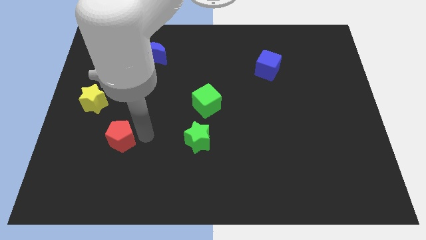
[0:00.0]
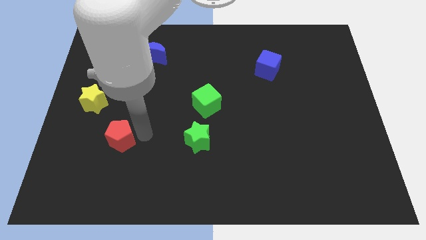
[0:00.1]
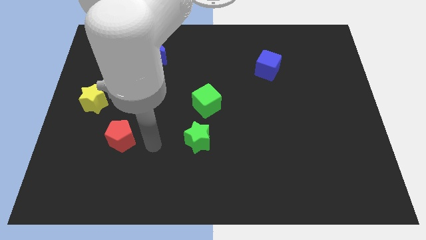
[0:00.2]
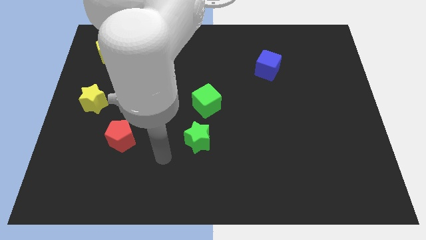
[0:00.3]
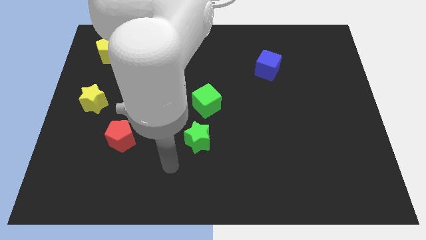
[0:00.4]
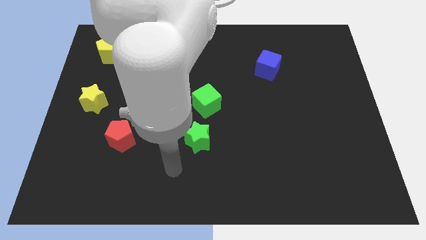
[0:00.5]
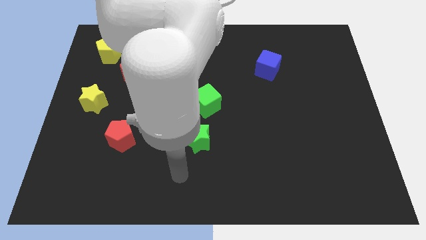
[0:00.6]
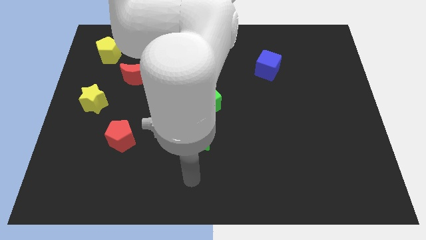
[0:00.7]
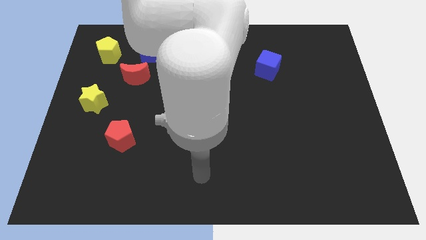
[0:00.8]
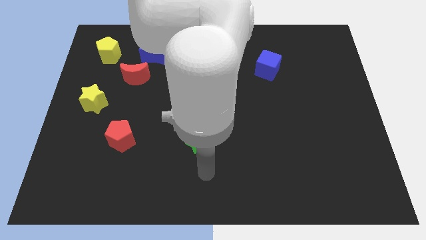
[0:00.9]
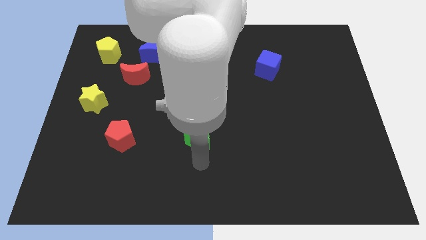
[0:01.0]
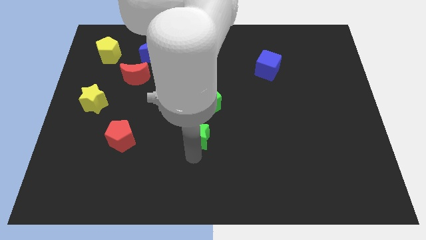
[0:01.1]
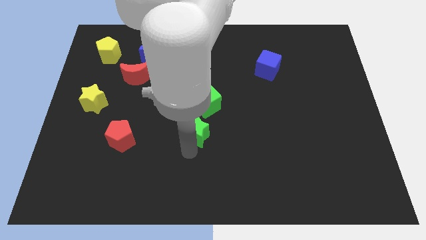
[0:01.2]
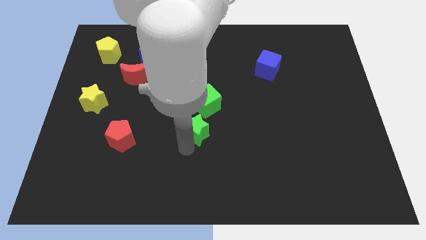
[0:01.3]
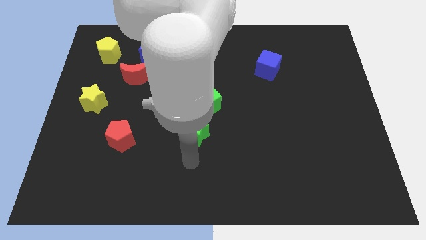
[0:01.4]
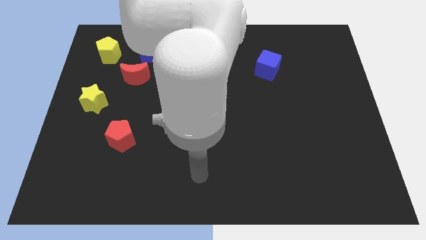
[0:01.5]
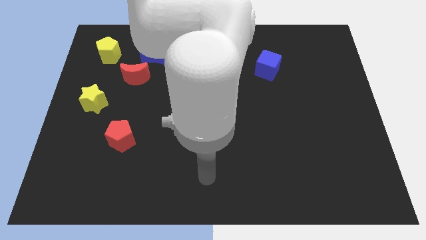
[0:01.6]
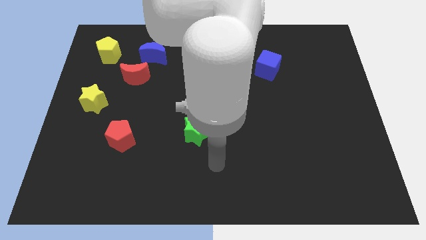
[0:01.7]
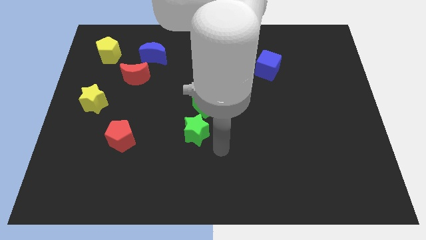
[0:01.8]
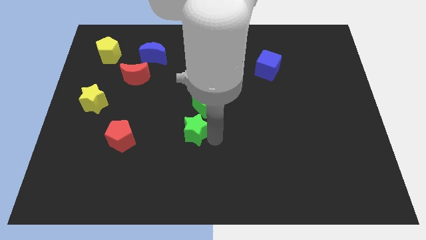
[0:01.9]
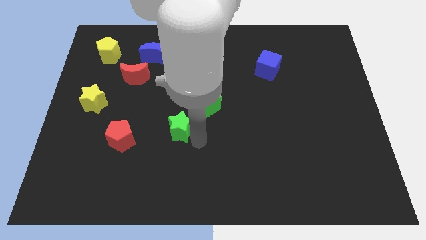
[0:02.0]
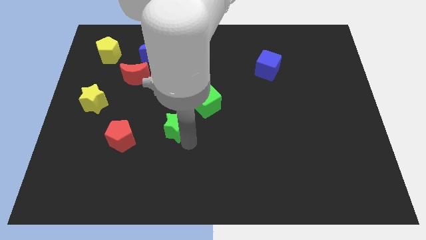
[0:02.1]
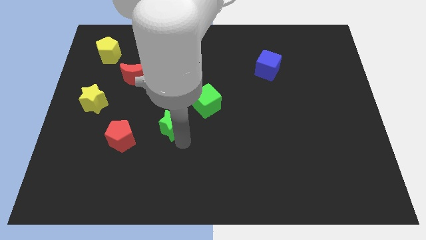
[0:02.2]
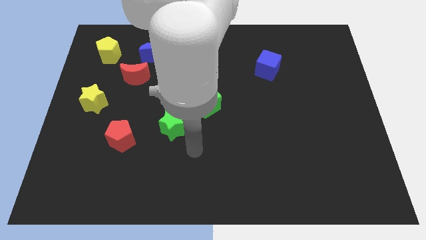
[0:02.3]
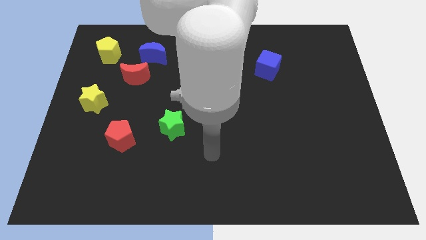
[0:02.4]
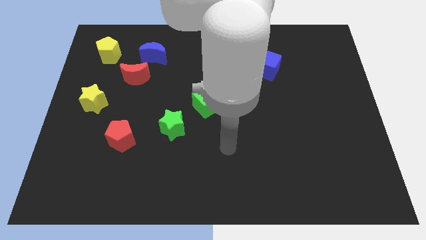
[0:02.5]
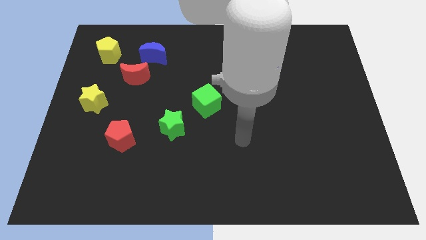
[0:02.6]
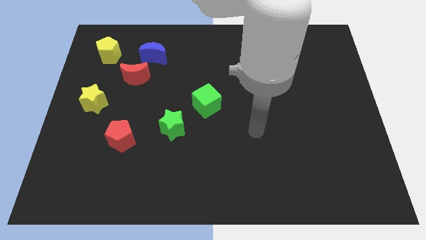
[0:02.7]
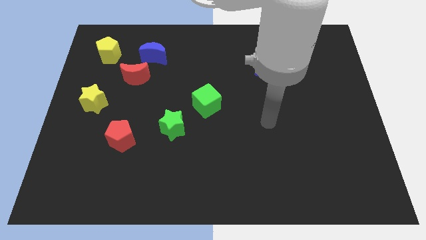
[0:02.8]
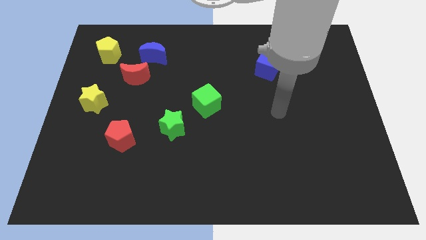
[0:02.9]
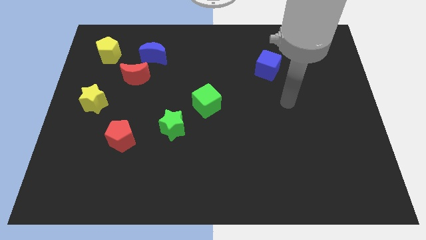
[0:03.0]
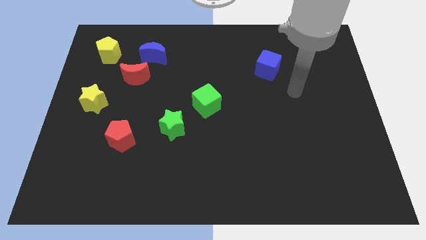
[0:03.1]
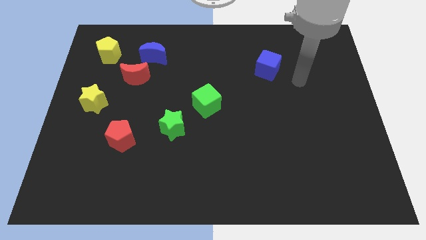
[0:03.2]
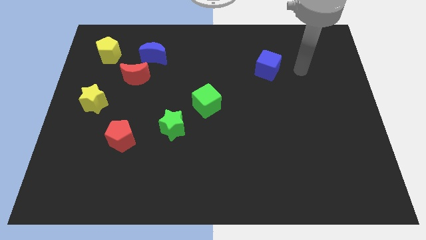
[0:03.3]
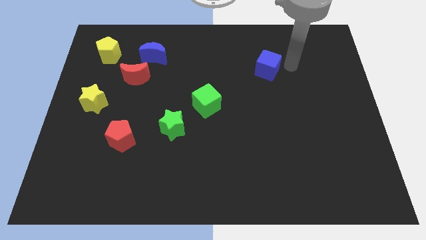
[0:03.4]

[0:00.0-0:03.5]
place the green star in between green cube and red pentagon

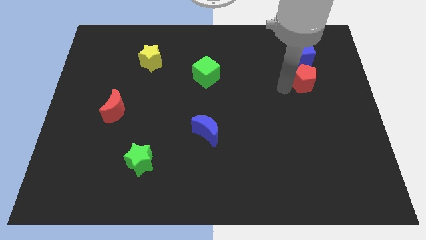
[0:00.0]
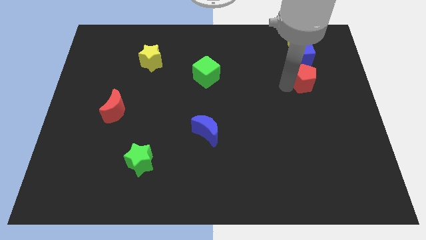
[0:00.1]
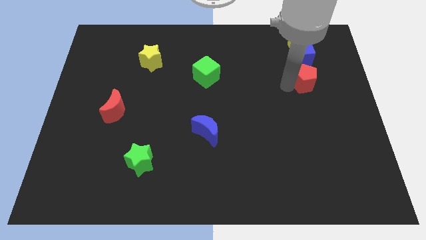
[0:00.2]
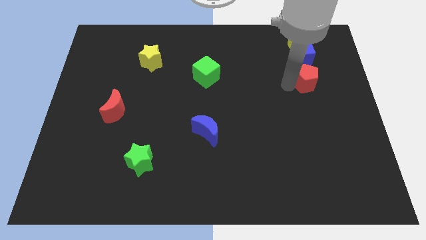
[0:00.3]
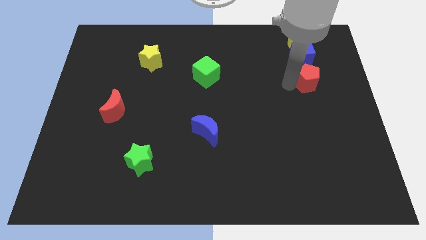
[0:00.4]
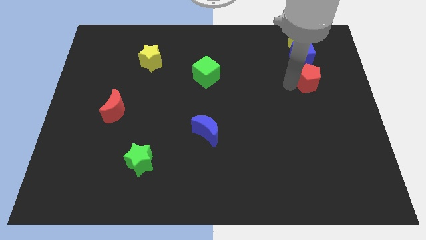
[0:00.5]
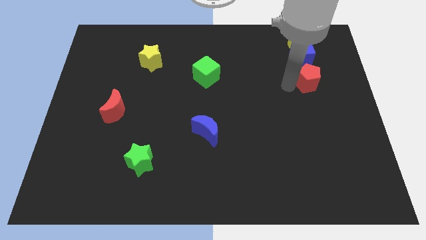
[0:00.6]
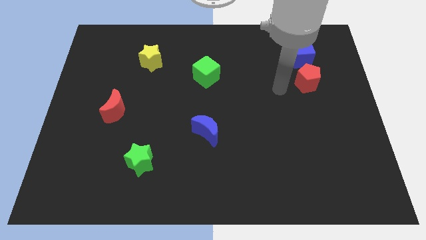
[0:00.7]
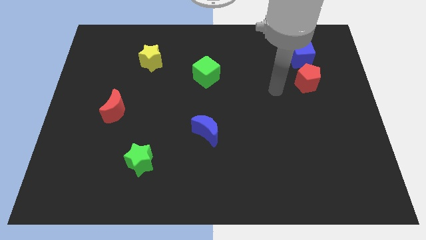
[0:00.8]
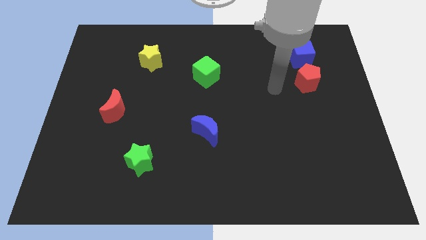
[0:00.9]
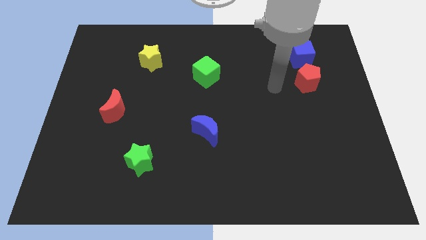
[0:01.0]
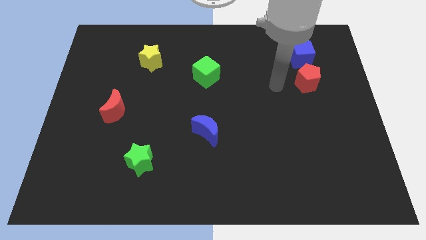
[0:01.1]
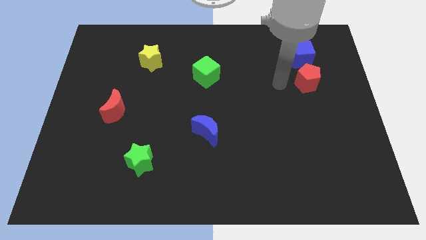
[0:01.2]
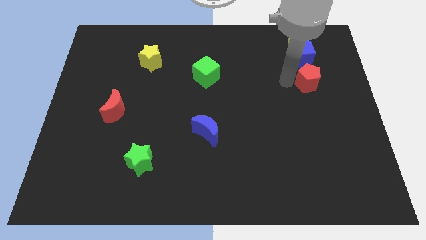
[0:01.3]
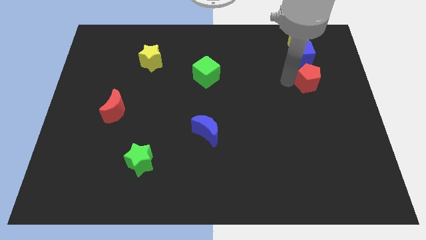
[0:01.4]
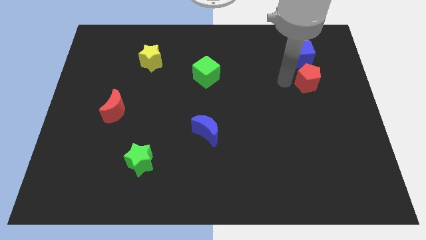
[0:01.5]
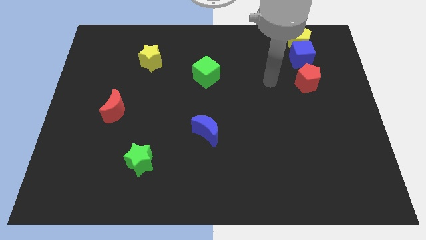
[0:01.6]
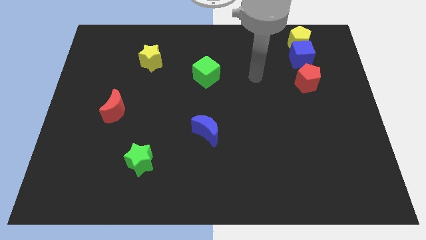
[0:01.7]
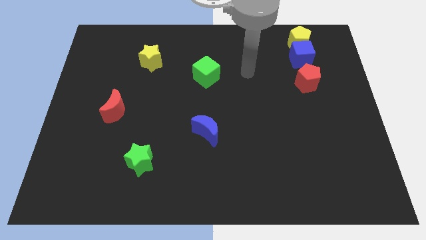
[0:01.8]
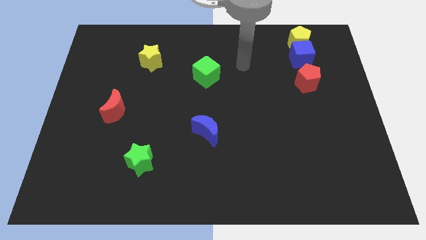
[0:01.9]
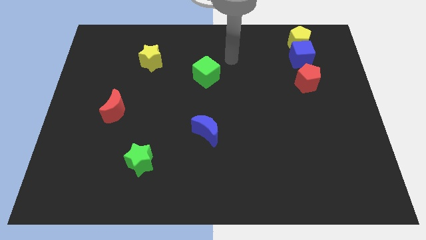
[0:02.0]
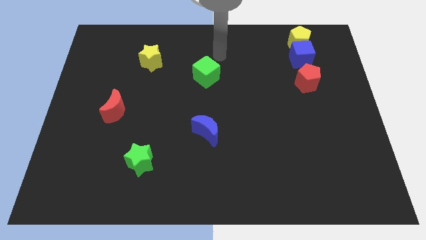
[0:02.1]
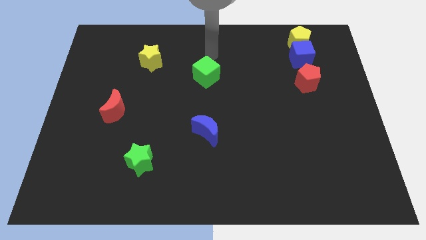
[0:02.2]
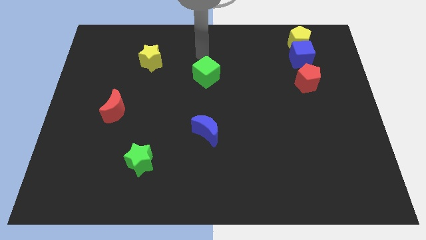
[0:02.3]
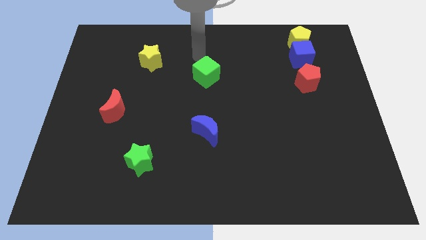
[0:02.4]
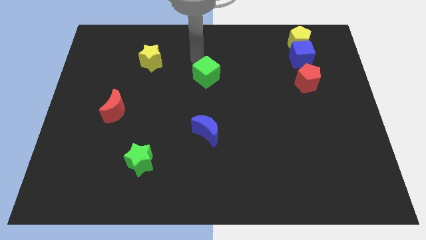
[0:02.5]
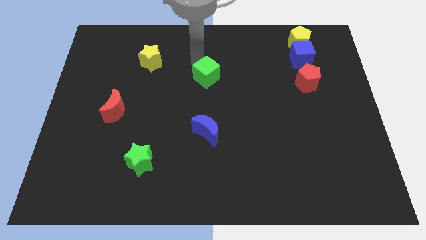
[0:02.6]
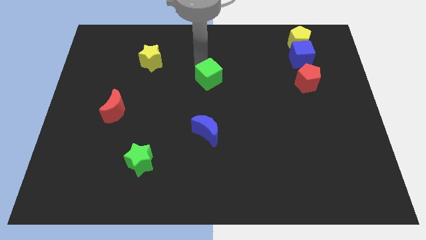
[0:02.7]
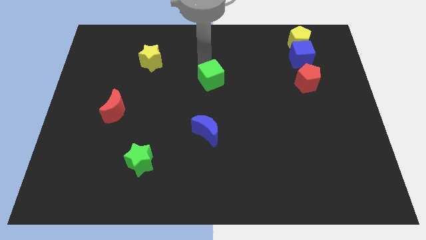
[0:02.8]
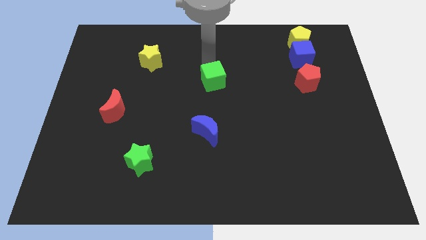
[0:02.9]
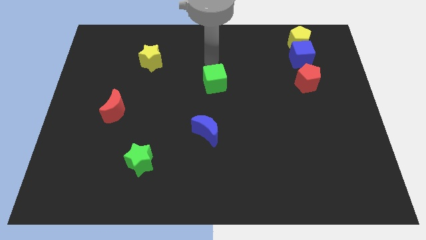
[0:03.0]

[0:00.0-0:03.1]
move arm near green cube

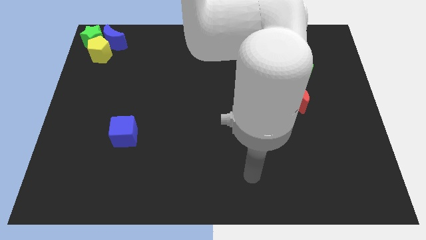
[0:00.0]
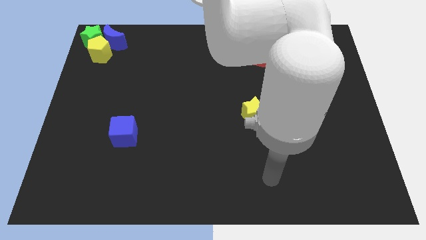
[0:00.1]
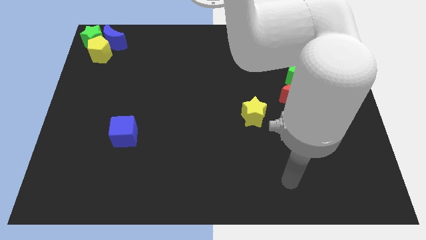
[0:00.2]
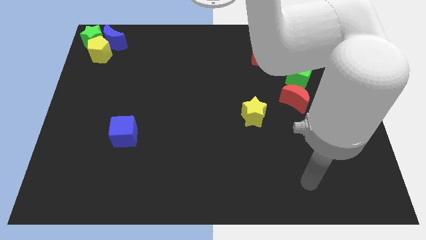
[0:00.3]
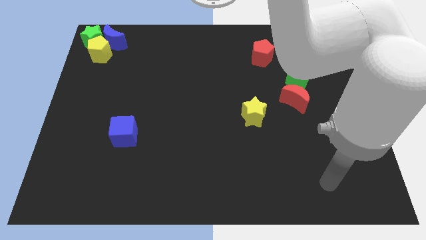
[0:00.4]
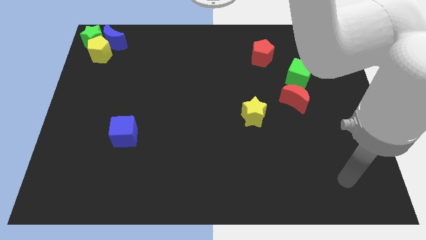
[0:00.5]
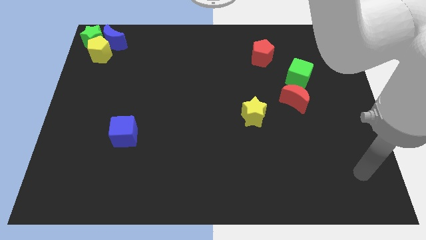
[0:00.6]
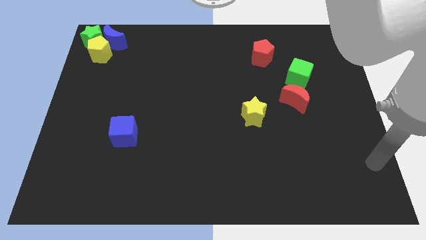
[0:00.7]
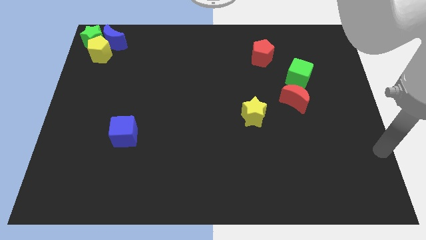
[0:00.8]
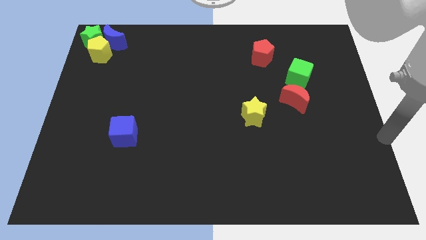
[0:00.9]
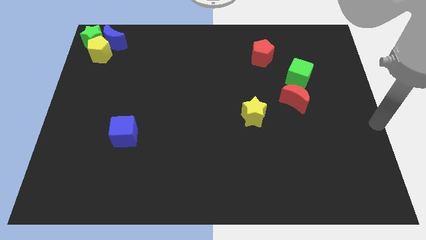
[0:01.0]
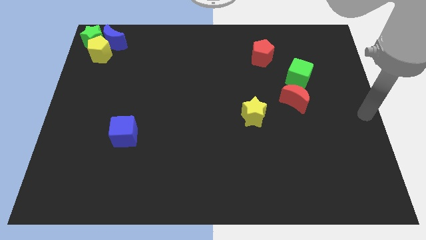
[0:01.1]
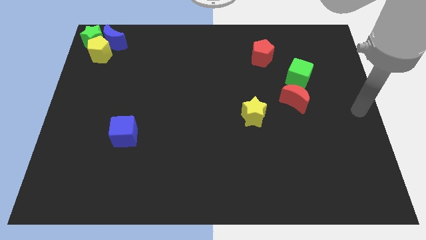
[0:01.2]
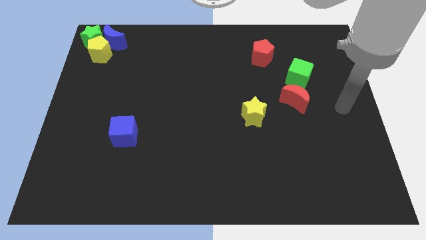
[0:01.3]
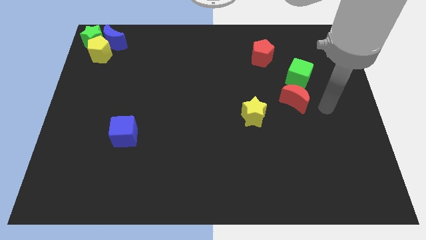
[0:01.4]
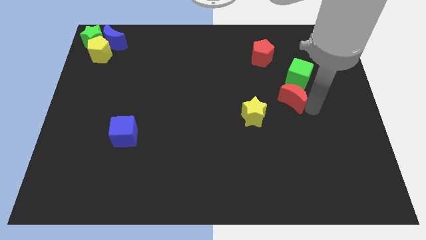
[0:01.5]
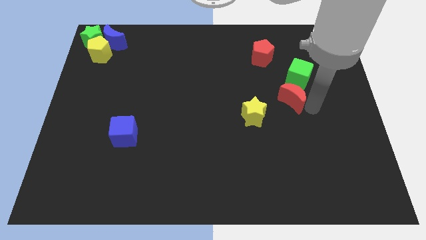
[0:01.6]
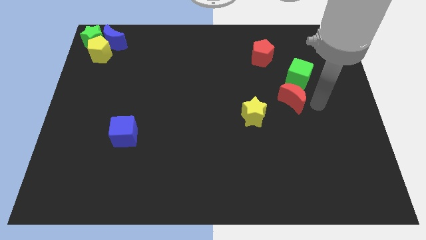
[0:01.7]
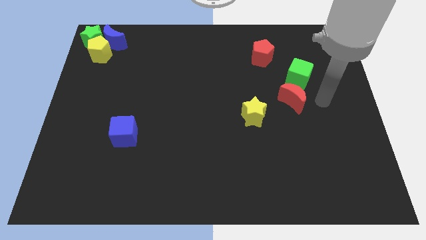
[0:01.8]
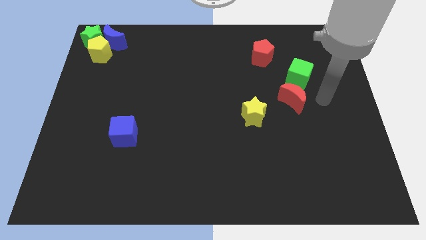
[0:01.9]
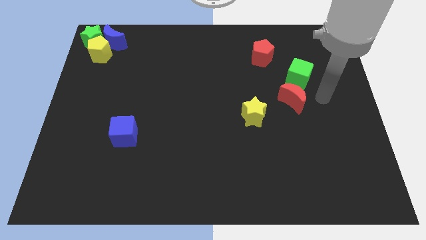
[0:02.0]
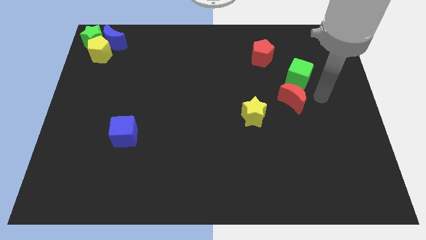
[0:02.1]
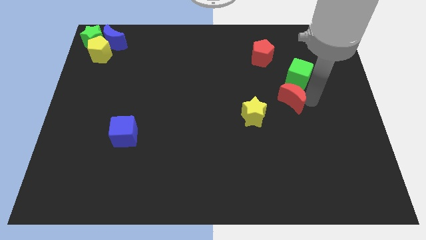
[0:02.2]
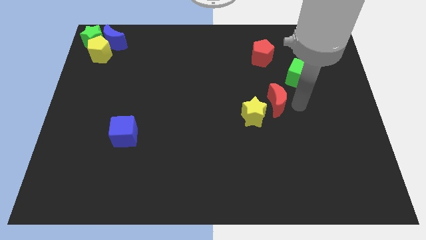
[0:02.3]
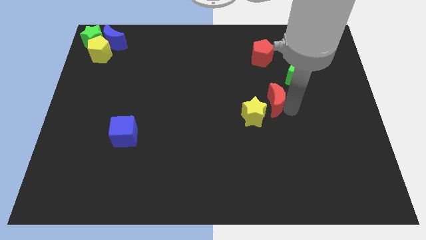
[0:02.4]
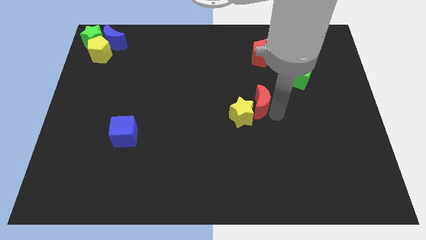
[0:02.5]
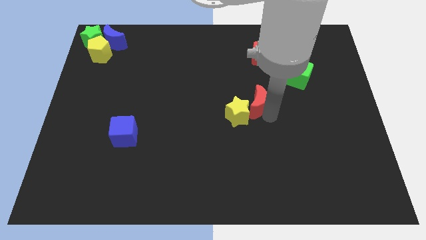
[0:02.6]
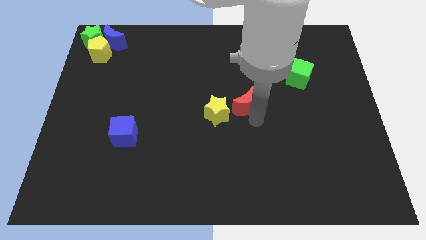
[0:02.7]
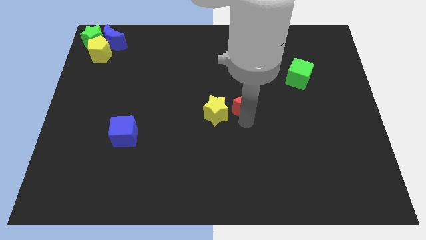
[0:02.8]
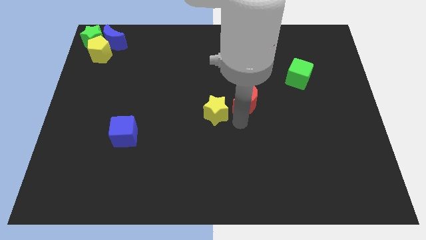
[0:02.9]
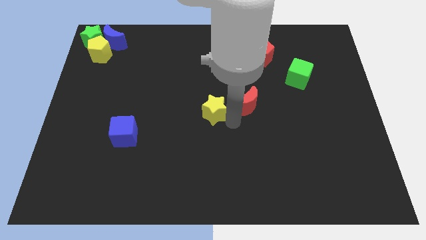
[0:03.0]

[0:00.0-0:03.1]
slide yellow star and red moon towards center
